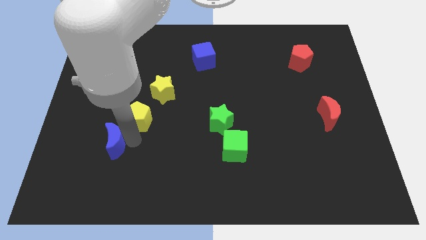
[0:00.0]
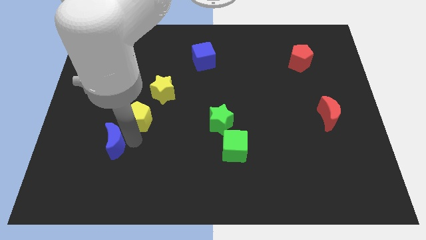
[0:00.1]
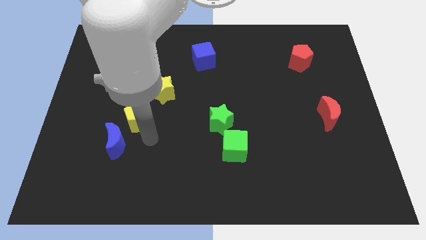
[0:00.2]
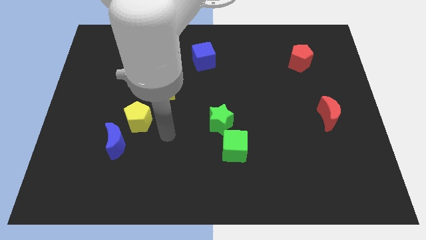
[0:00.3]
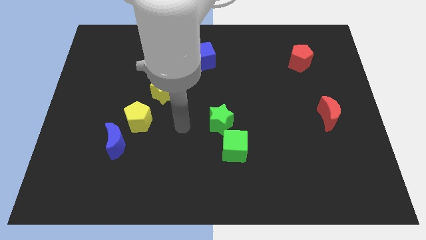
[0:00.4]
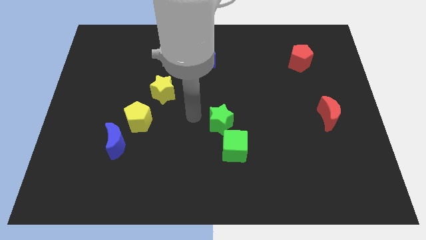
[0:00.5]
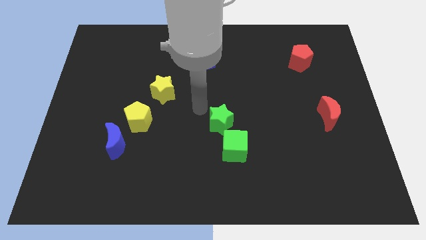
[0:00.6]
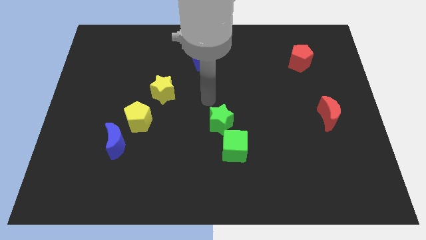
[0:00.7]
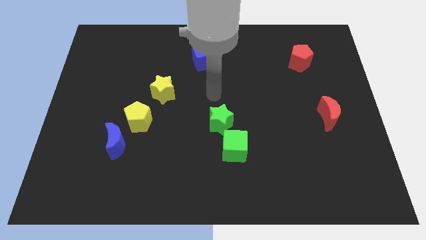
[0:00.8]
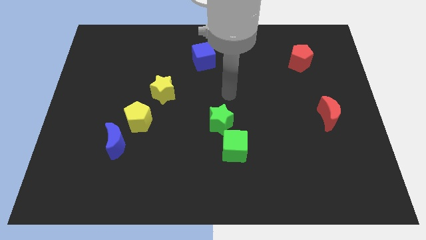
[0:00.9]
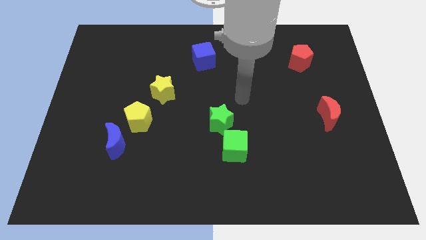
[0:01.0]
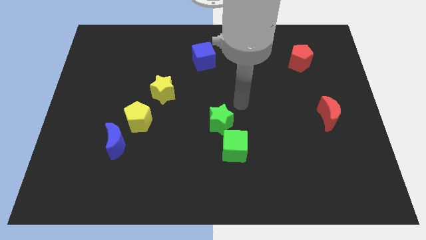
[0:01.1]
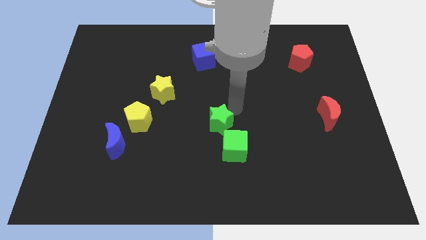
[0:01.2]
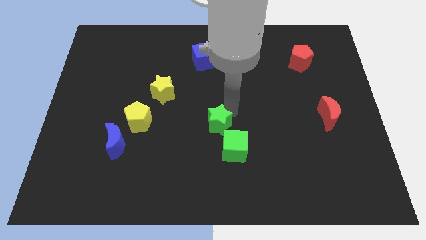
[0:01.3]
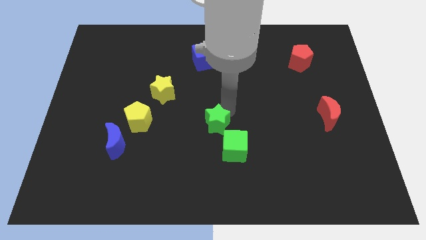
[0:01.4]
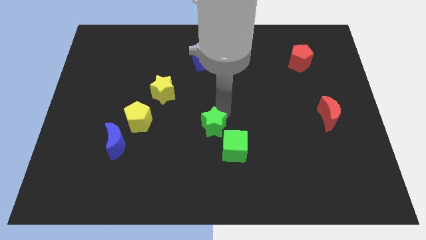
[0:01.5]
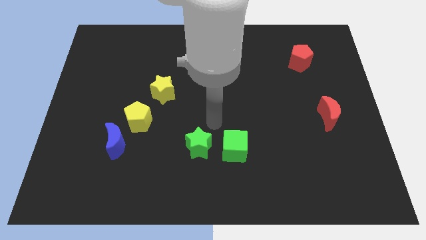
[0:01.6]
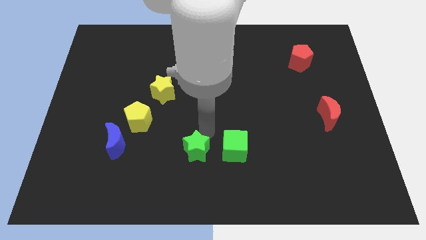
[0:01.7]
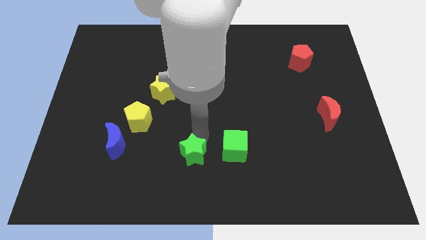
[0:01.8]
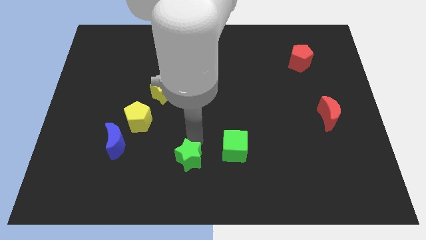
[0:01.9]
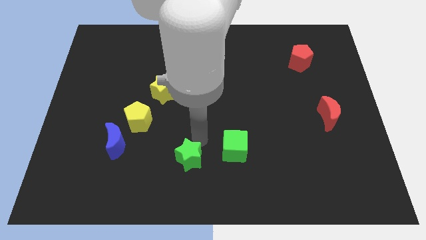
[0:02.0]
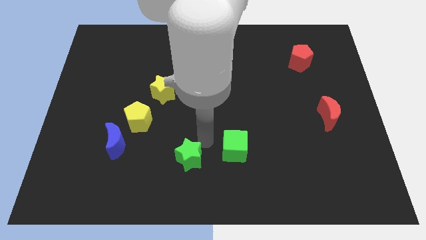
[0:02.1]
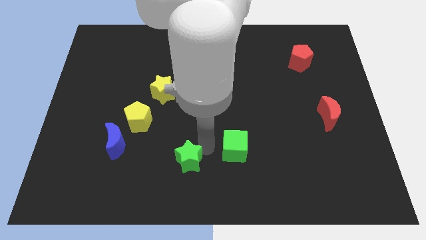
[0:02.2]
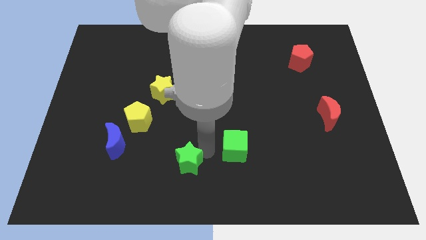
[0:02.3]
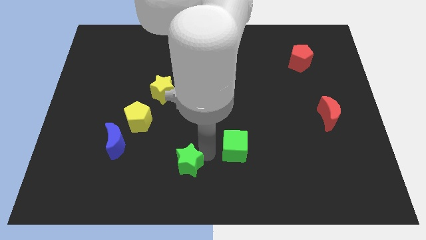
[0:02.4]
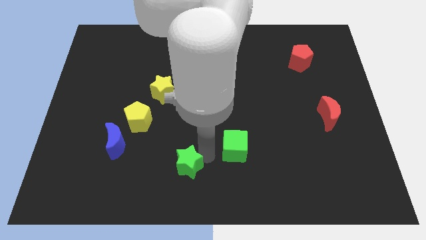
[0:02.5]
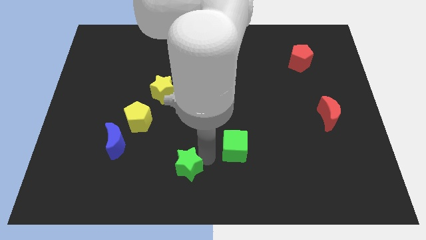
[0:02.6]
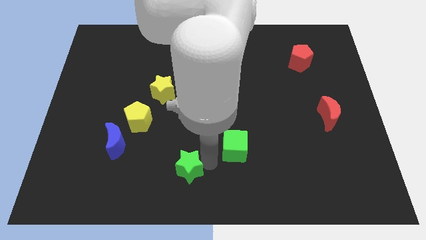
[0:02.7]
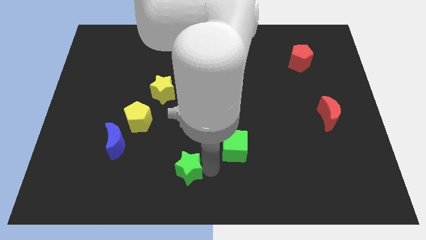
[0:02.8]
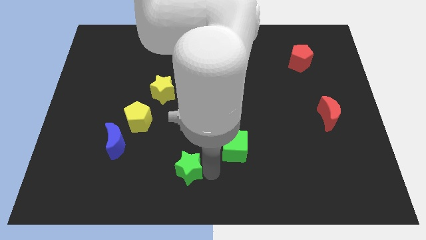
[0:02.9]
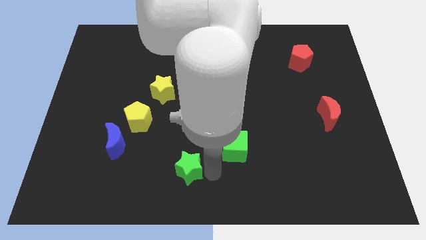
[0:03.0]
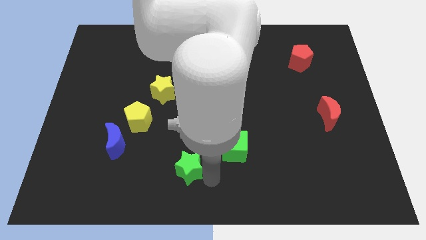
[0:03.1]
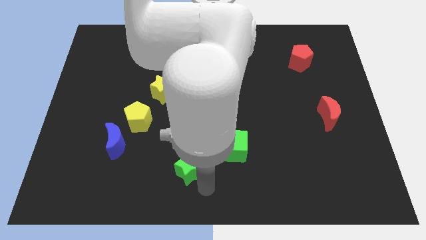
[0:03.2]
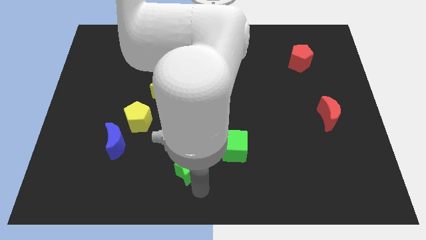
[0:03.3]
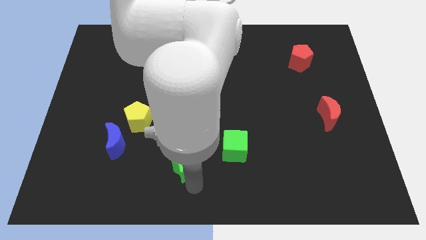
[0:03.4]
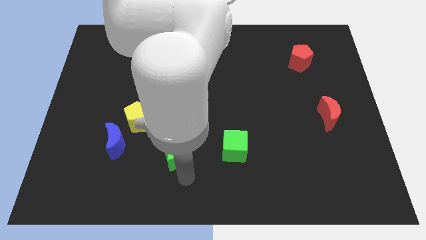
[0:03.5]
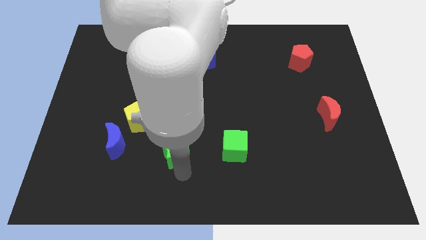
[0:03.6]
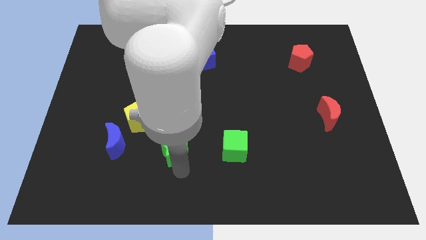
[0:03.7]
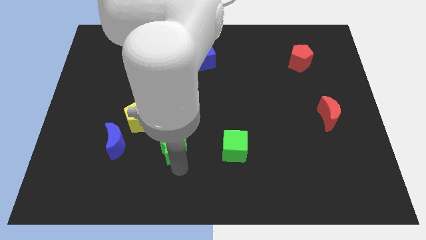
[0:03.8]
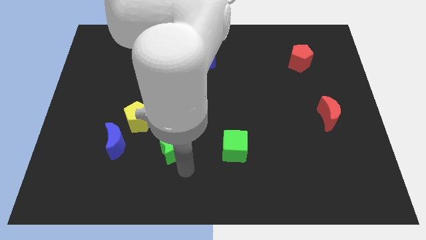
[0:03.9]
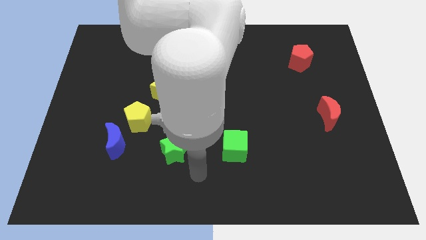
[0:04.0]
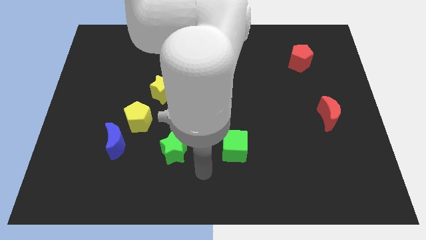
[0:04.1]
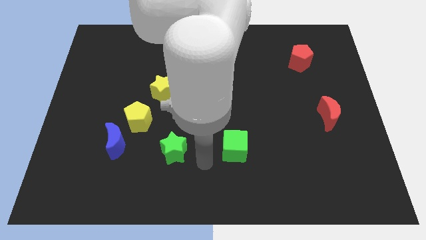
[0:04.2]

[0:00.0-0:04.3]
place the green star in between blue crescent and green cube

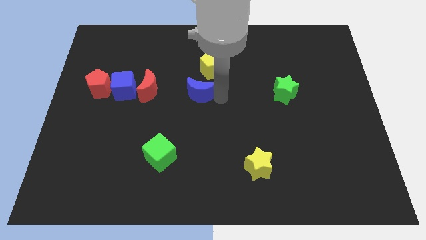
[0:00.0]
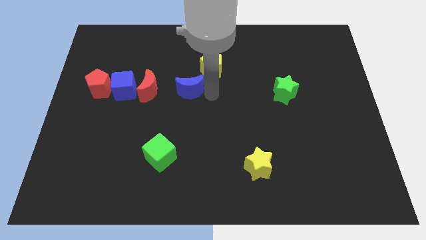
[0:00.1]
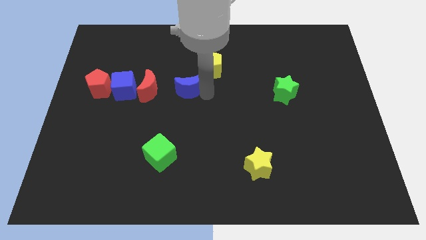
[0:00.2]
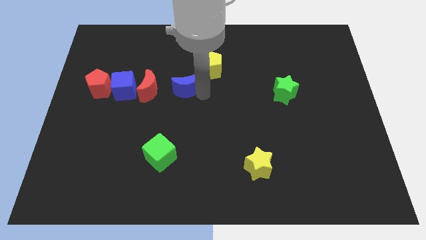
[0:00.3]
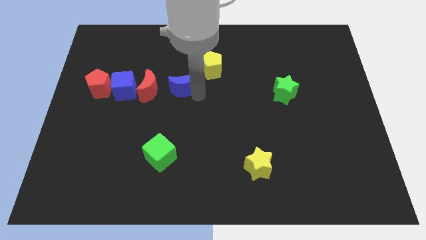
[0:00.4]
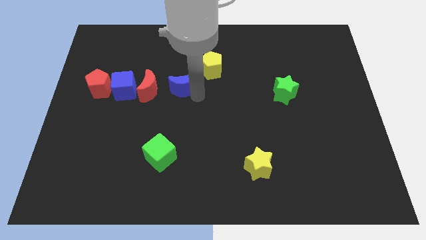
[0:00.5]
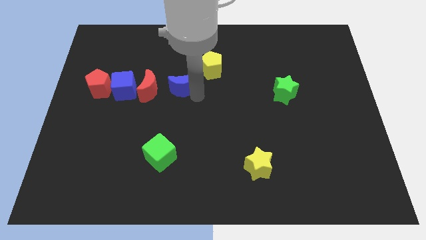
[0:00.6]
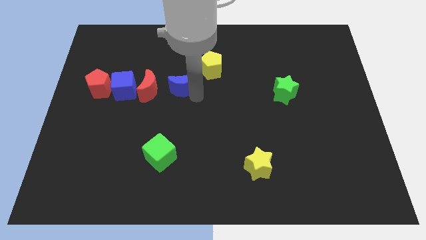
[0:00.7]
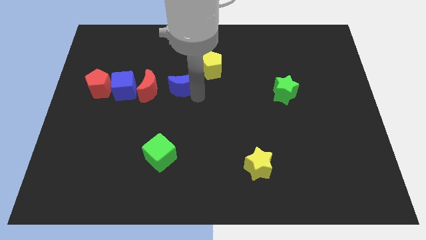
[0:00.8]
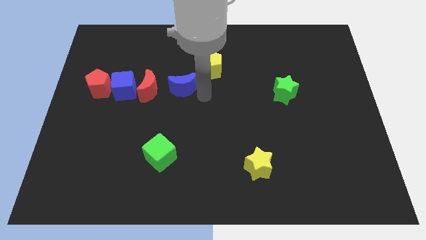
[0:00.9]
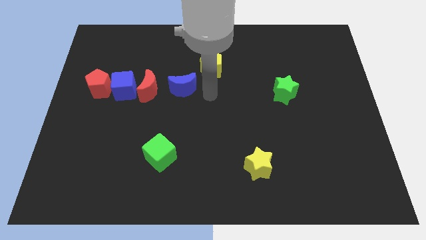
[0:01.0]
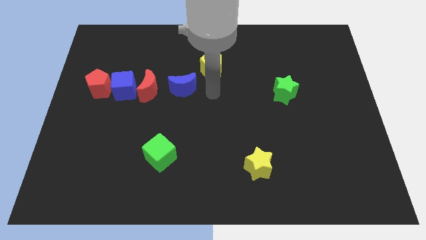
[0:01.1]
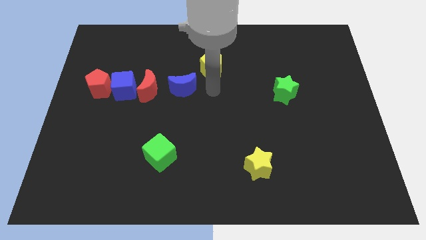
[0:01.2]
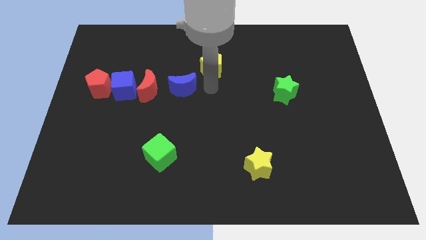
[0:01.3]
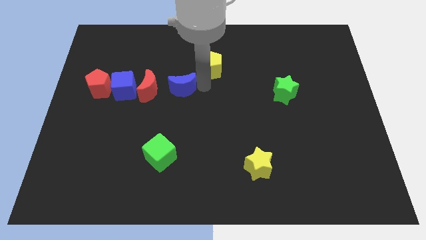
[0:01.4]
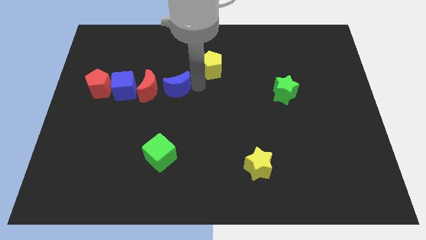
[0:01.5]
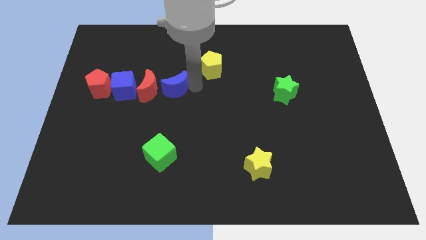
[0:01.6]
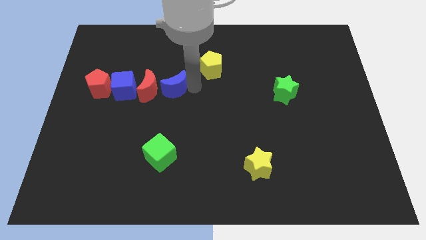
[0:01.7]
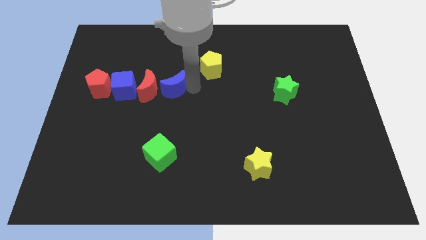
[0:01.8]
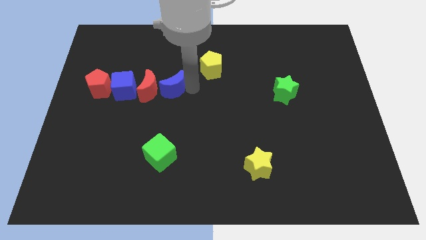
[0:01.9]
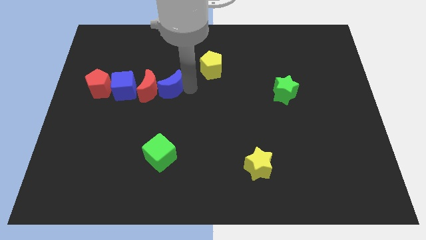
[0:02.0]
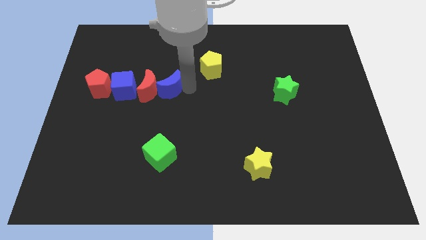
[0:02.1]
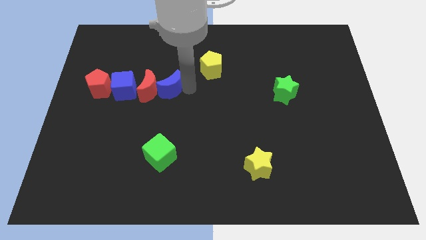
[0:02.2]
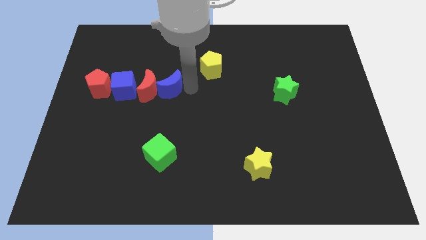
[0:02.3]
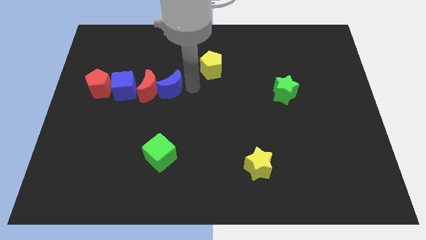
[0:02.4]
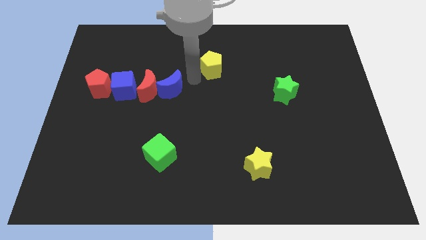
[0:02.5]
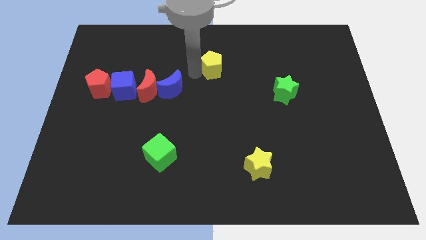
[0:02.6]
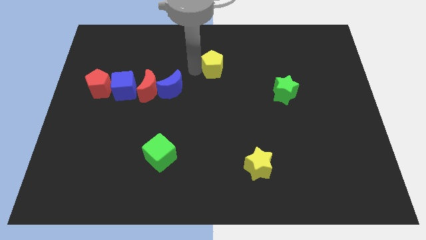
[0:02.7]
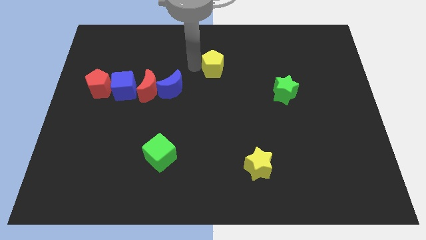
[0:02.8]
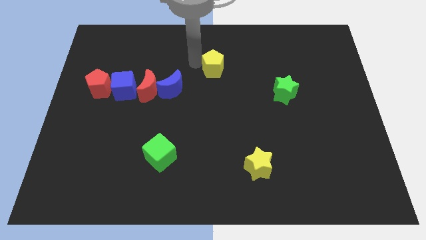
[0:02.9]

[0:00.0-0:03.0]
move blue moon towards red moon

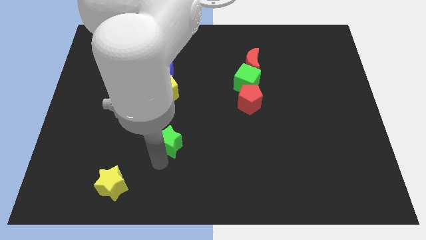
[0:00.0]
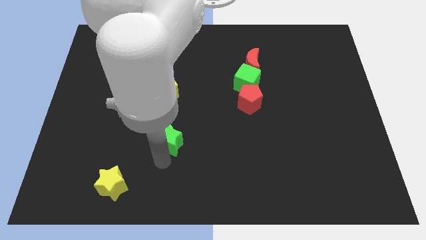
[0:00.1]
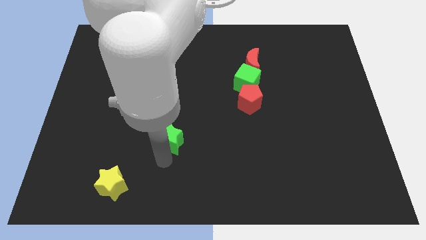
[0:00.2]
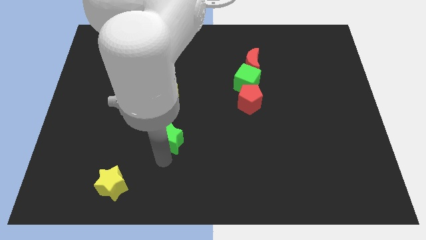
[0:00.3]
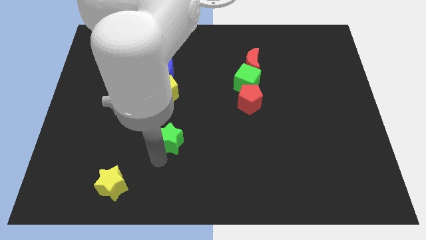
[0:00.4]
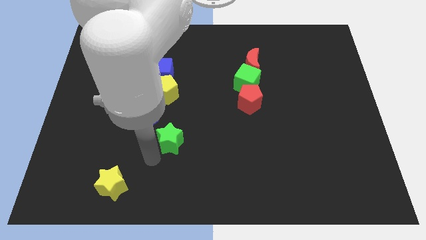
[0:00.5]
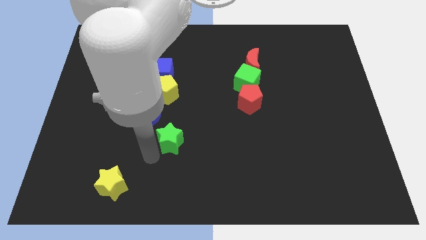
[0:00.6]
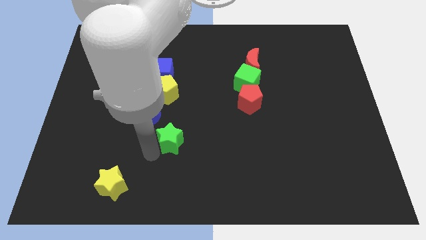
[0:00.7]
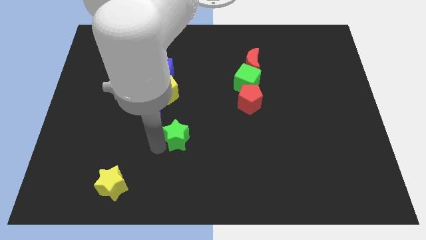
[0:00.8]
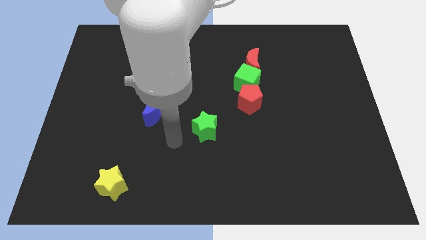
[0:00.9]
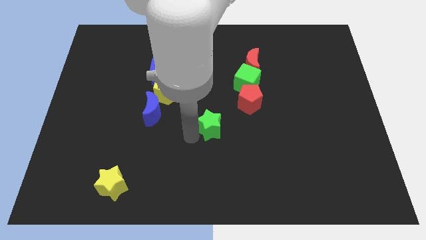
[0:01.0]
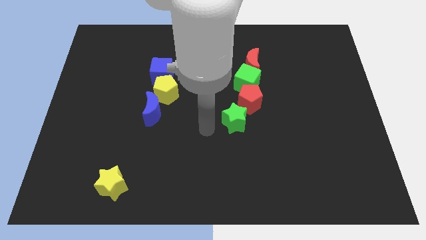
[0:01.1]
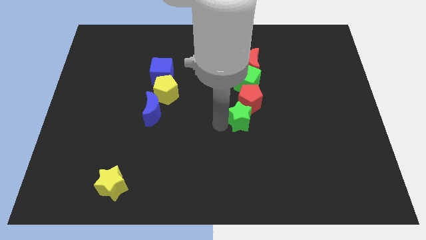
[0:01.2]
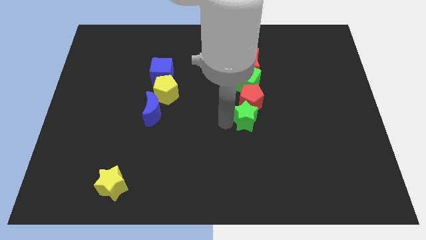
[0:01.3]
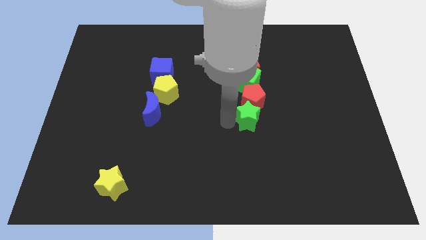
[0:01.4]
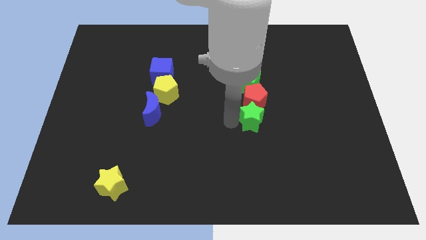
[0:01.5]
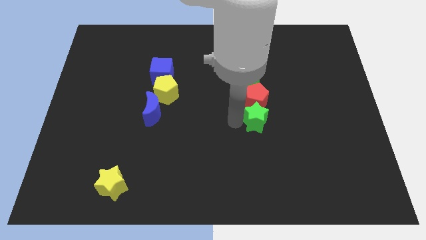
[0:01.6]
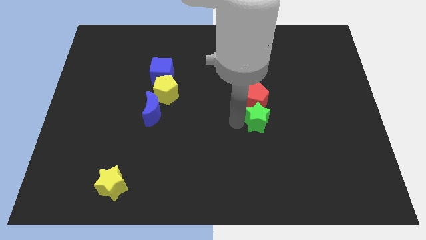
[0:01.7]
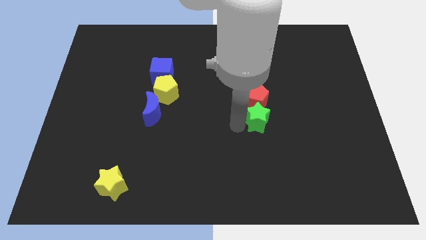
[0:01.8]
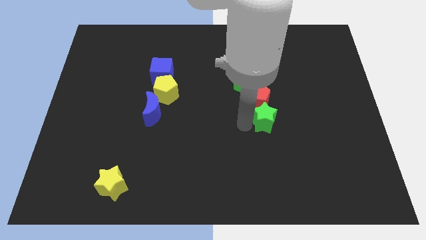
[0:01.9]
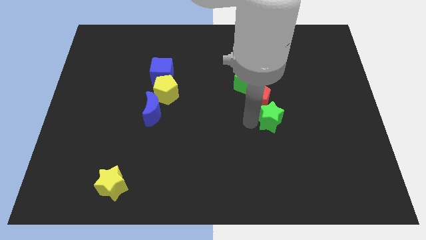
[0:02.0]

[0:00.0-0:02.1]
place green star below red pentagon
